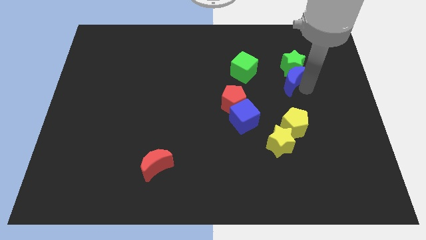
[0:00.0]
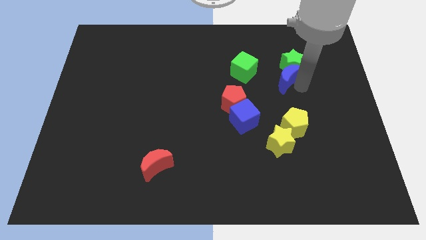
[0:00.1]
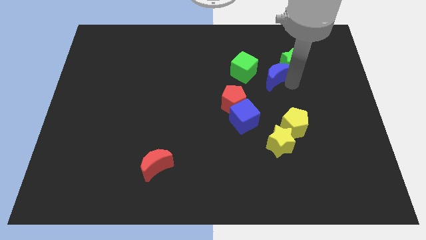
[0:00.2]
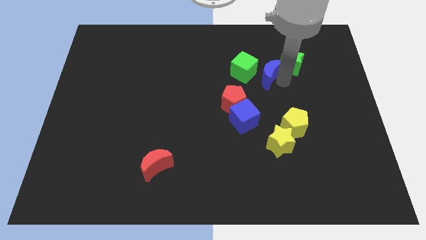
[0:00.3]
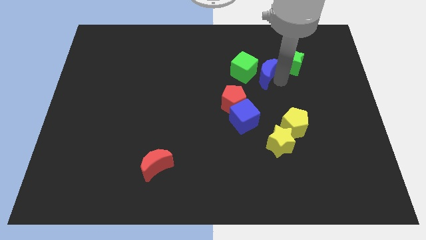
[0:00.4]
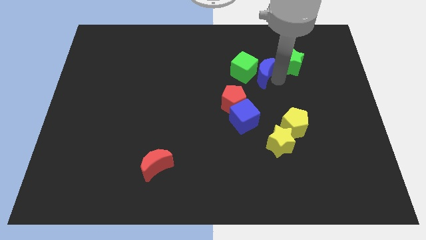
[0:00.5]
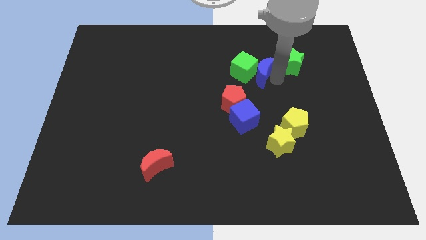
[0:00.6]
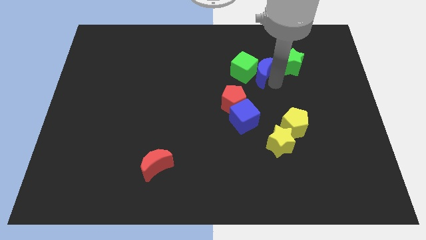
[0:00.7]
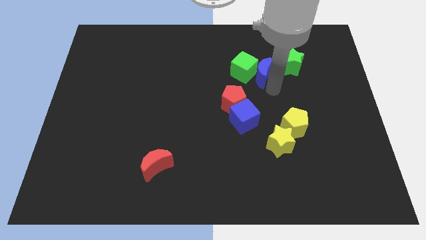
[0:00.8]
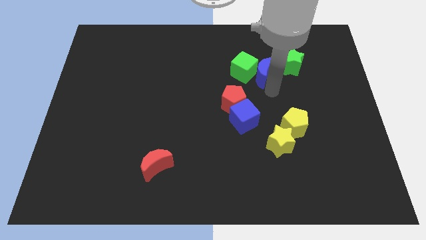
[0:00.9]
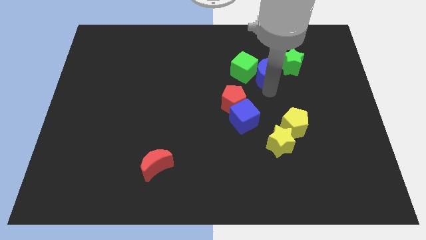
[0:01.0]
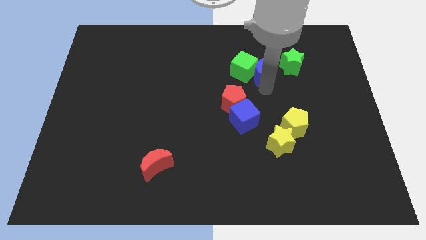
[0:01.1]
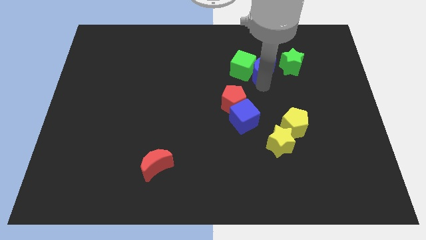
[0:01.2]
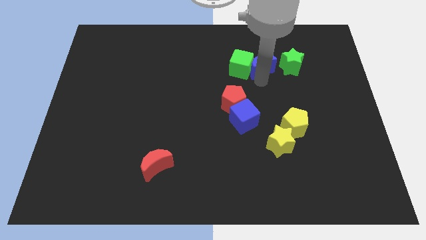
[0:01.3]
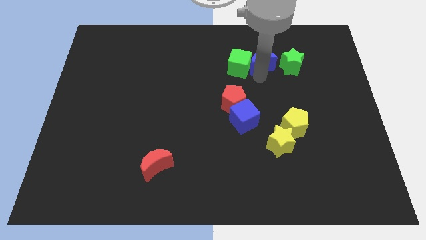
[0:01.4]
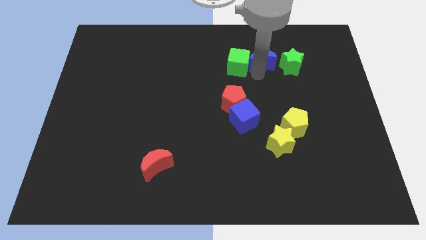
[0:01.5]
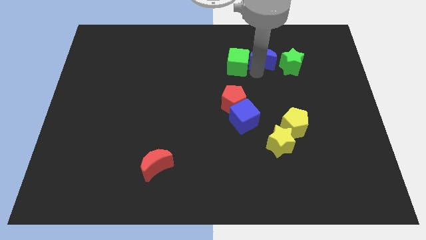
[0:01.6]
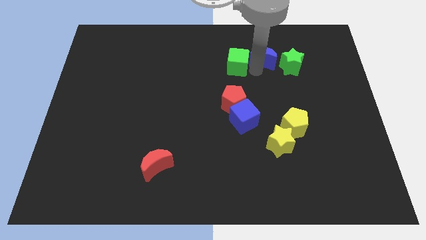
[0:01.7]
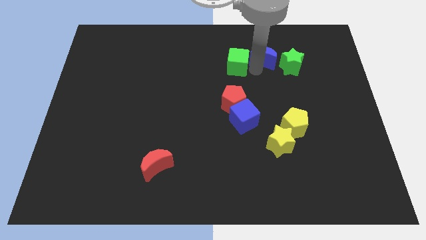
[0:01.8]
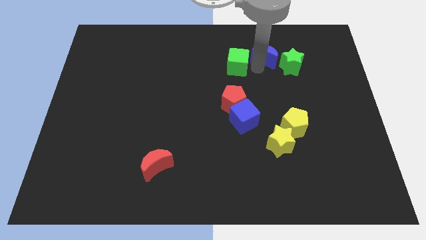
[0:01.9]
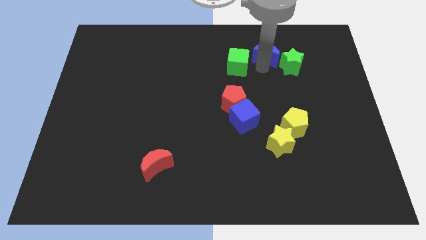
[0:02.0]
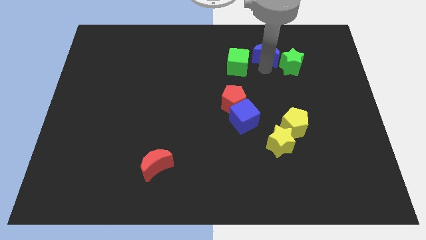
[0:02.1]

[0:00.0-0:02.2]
push the blue crescent in between green star and green cube

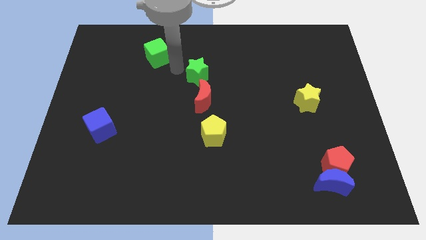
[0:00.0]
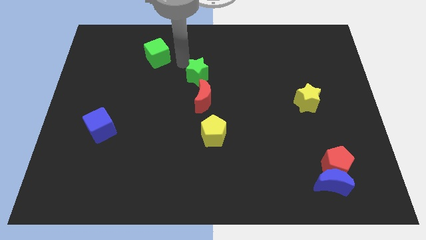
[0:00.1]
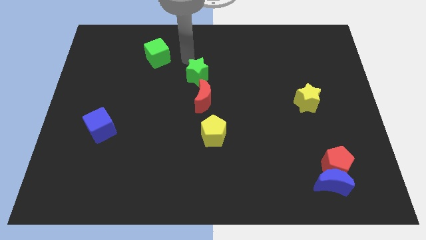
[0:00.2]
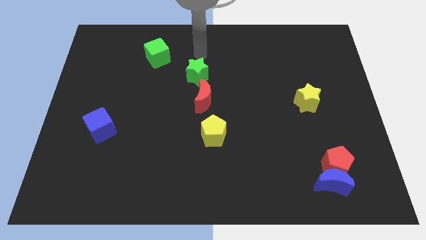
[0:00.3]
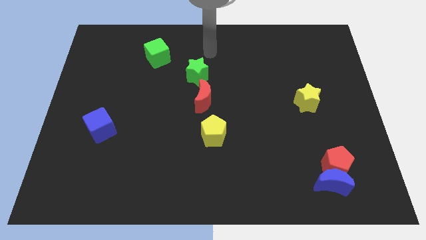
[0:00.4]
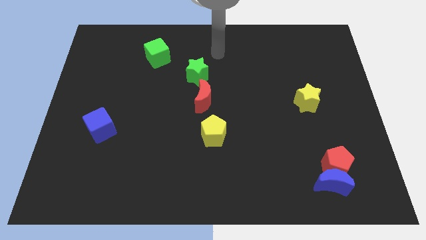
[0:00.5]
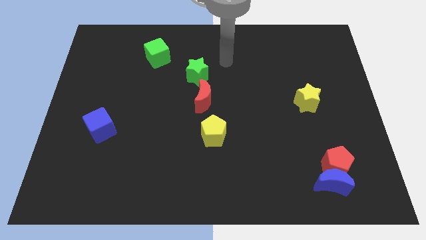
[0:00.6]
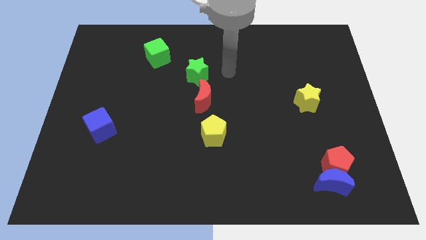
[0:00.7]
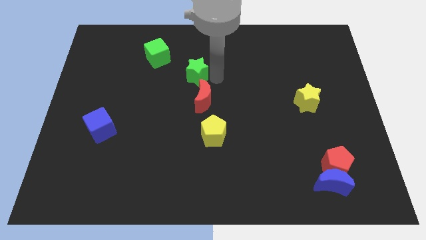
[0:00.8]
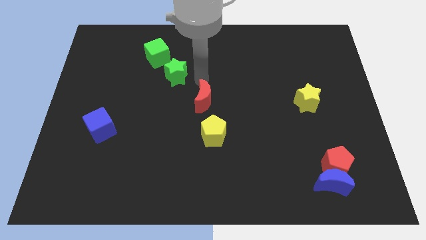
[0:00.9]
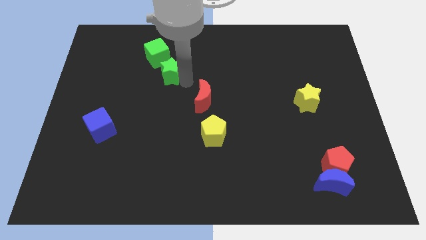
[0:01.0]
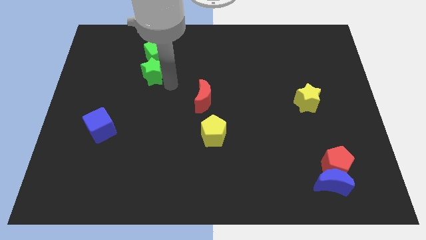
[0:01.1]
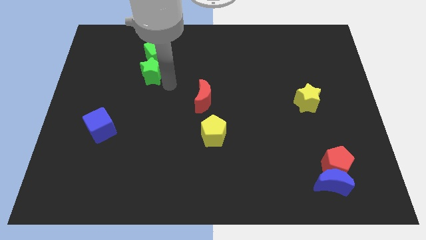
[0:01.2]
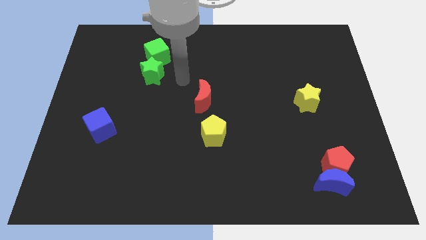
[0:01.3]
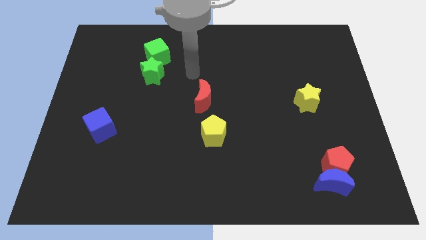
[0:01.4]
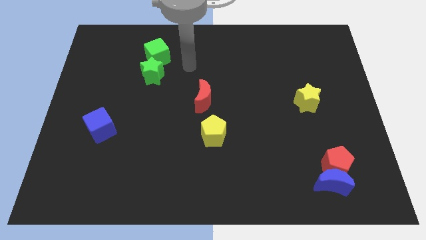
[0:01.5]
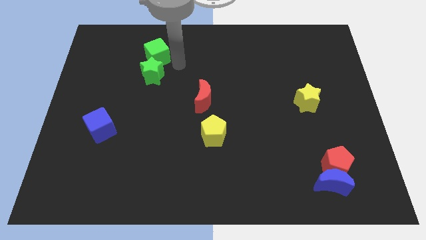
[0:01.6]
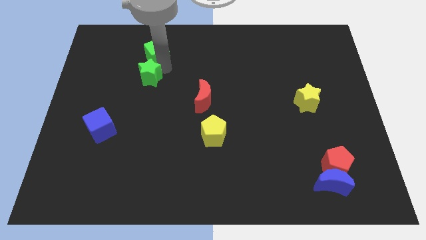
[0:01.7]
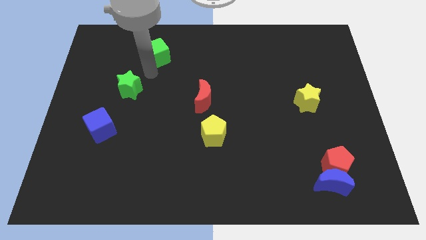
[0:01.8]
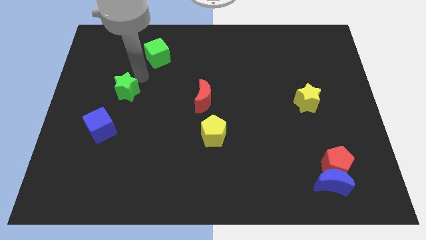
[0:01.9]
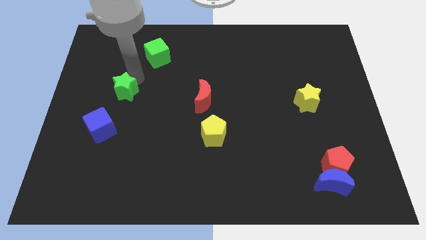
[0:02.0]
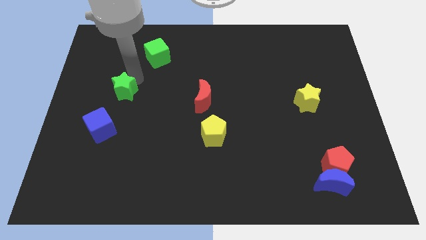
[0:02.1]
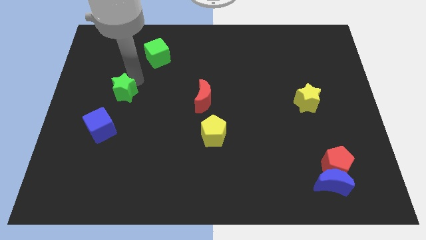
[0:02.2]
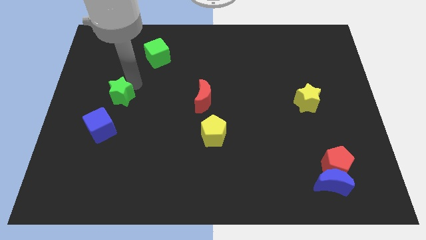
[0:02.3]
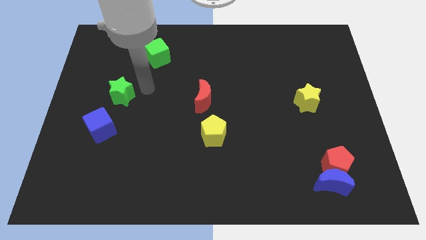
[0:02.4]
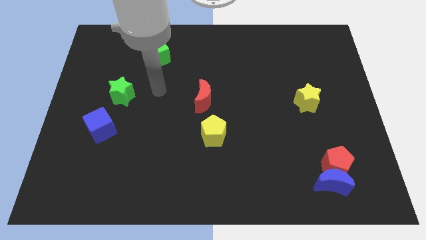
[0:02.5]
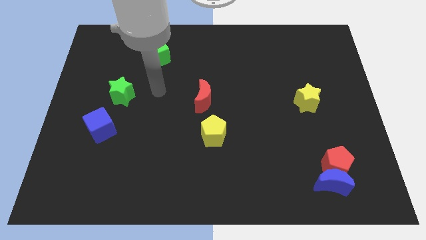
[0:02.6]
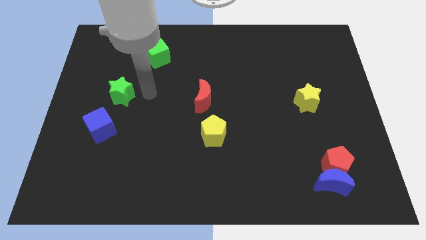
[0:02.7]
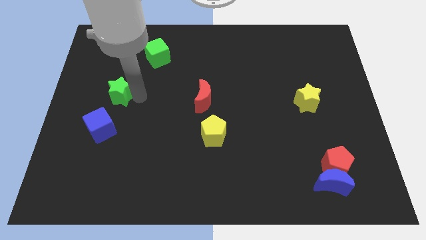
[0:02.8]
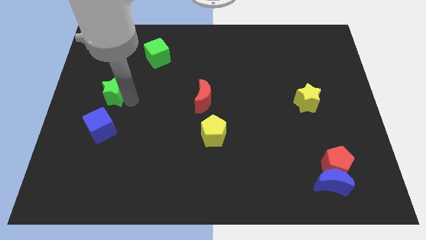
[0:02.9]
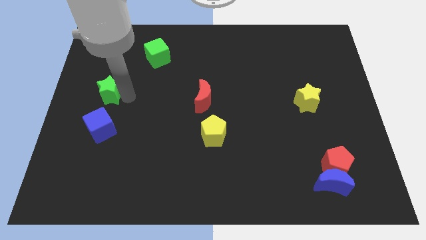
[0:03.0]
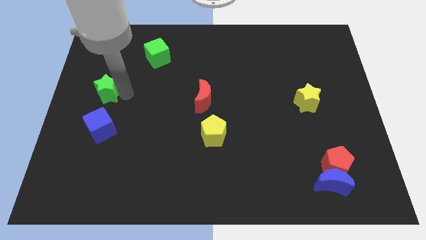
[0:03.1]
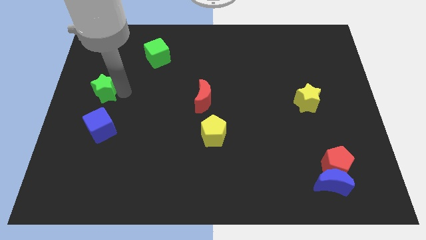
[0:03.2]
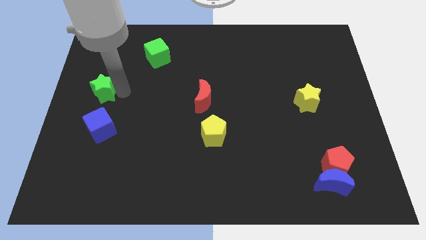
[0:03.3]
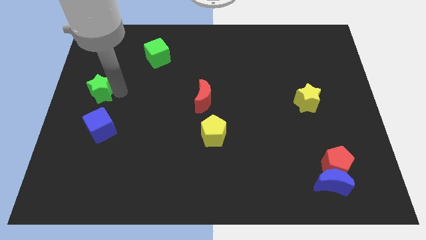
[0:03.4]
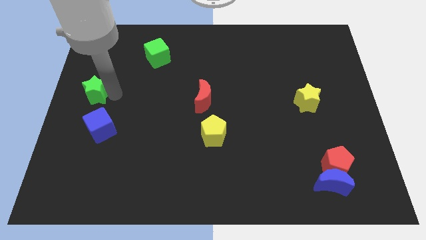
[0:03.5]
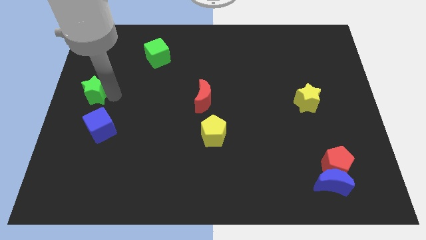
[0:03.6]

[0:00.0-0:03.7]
move the green star to the top of the blue cube

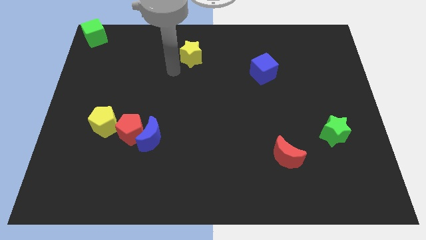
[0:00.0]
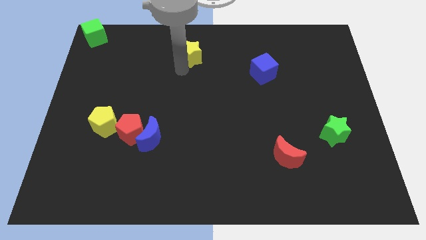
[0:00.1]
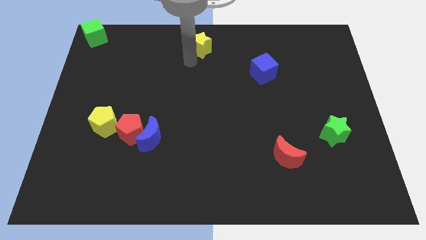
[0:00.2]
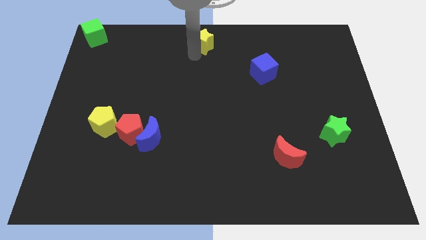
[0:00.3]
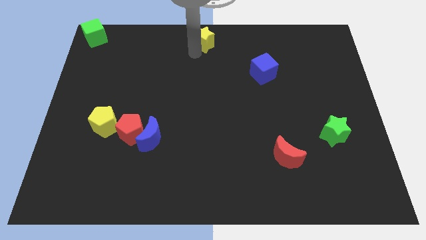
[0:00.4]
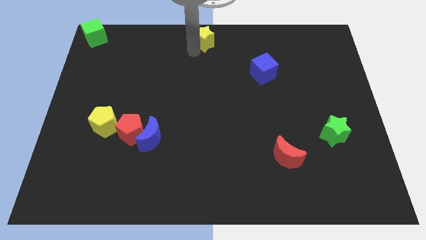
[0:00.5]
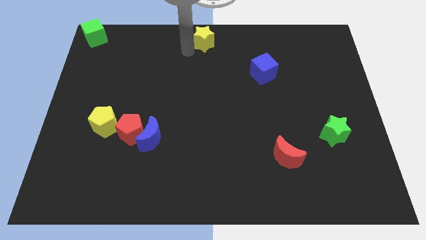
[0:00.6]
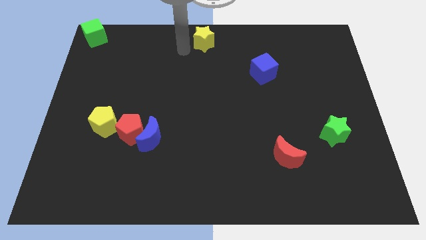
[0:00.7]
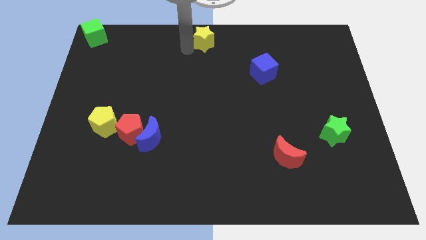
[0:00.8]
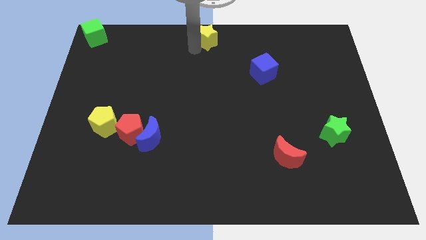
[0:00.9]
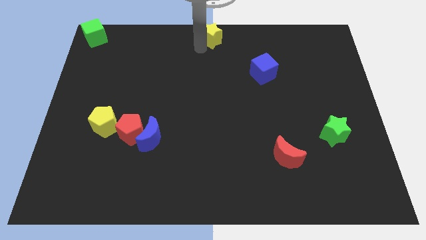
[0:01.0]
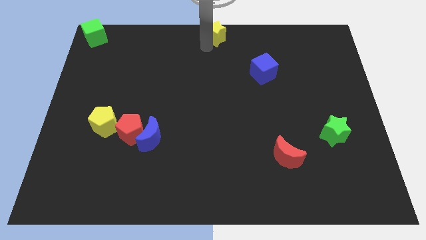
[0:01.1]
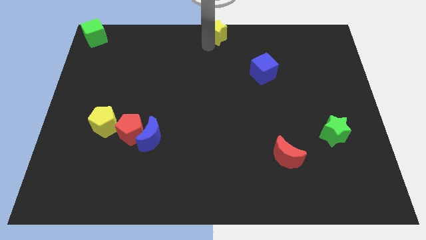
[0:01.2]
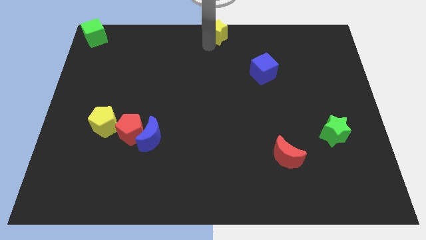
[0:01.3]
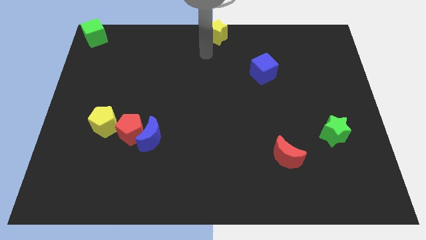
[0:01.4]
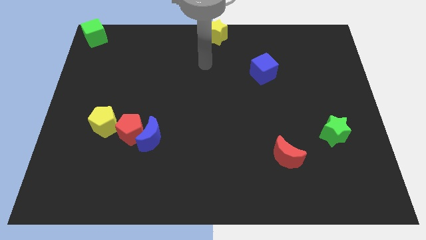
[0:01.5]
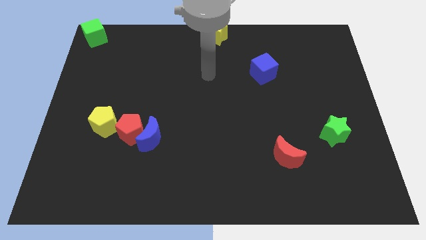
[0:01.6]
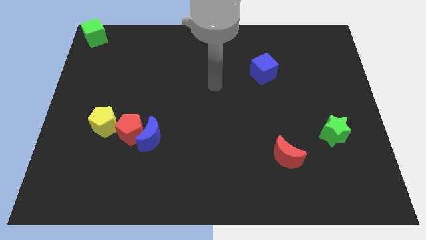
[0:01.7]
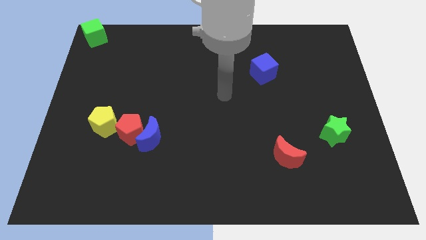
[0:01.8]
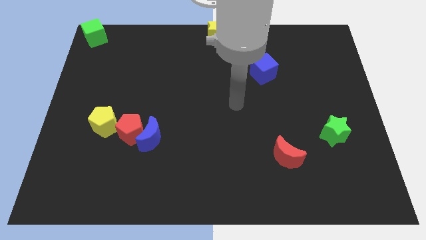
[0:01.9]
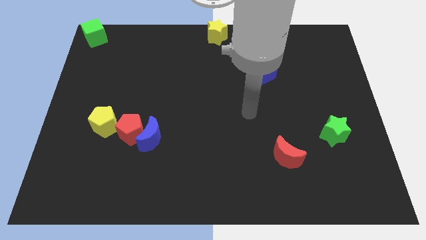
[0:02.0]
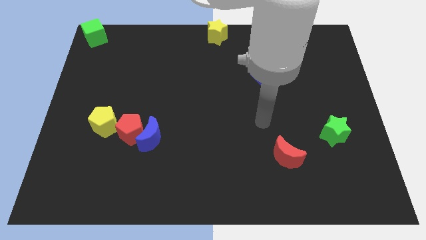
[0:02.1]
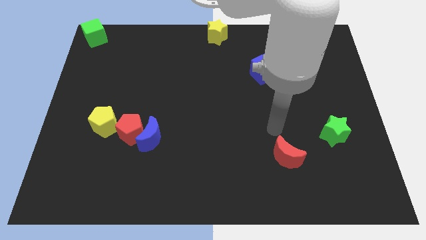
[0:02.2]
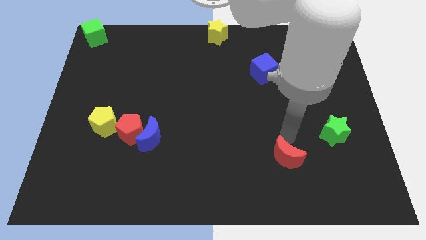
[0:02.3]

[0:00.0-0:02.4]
place the yellow star at the top center of the board

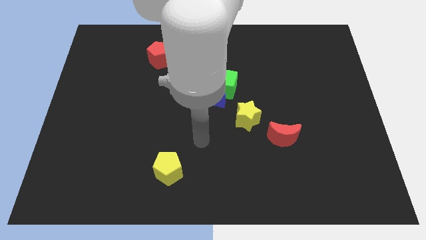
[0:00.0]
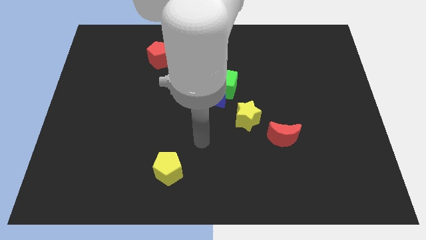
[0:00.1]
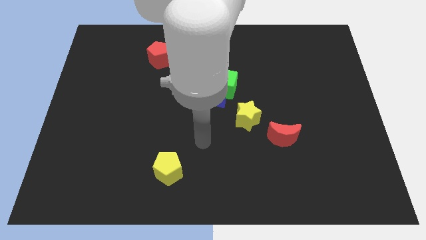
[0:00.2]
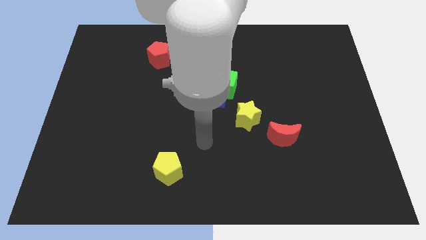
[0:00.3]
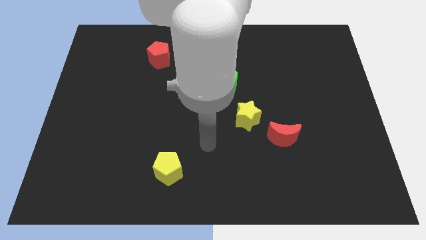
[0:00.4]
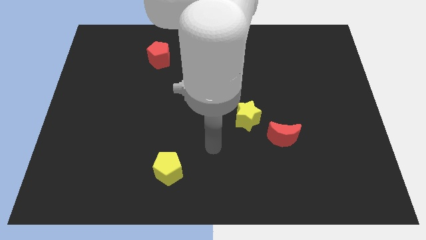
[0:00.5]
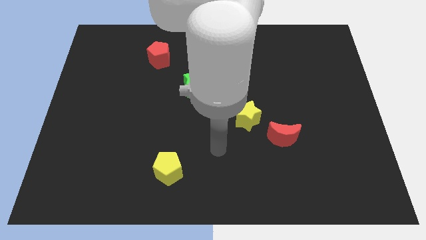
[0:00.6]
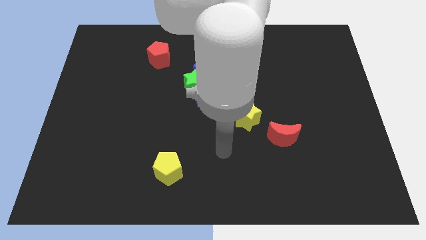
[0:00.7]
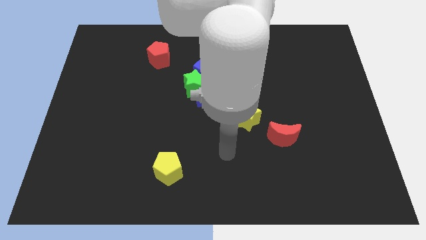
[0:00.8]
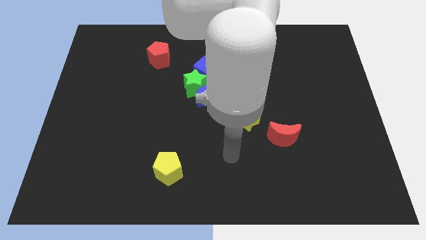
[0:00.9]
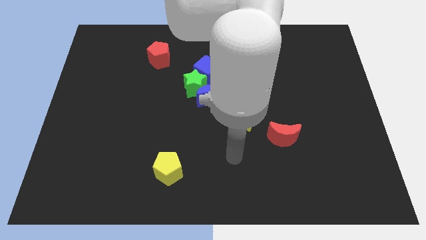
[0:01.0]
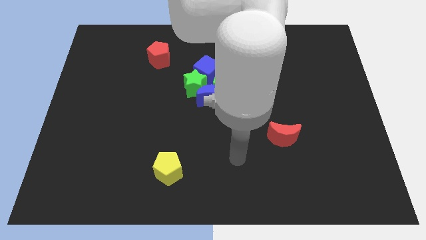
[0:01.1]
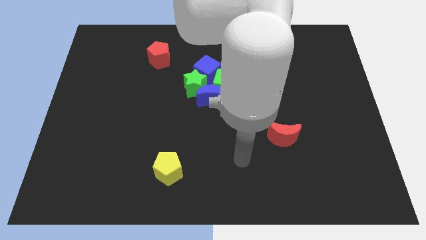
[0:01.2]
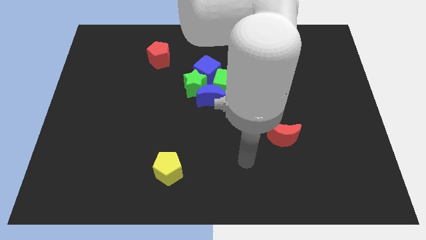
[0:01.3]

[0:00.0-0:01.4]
move the arm below the yellow star
